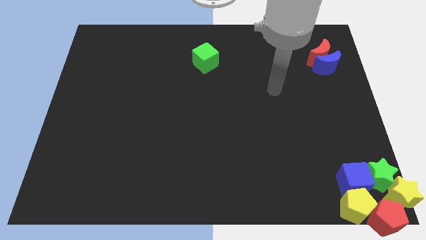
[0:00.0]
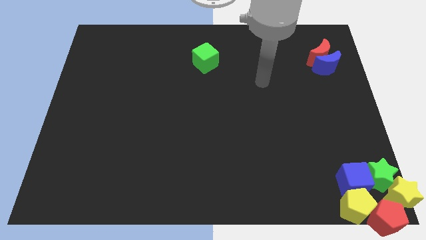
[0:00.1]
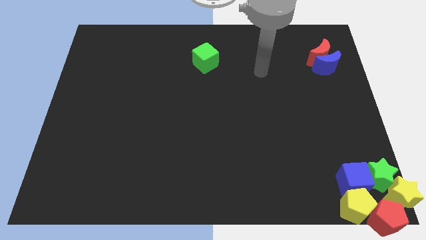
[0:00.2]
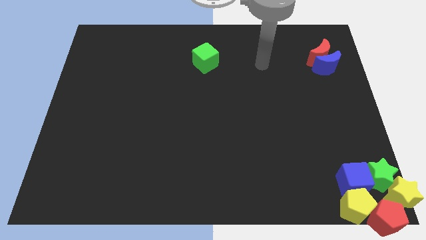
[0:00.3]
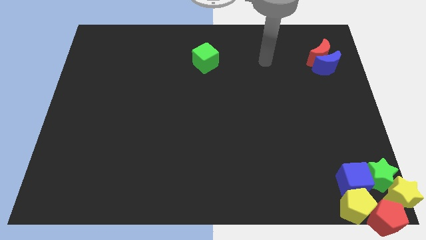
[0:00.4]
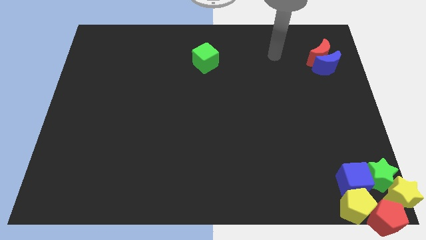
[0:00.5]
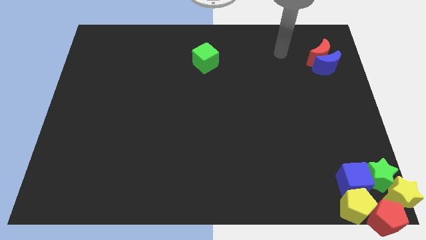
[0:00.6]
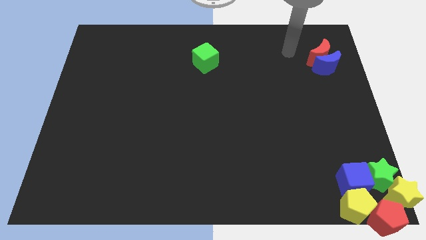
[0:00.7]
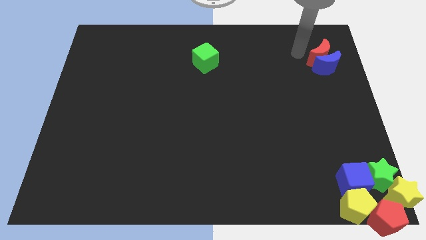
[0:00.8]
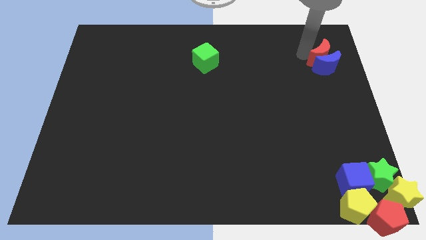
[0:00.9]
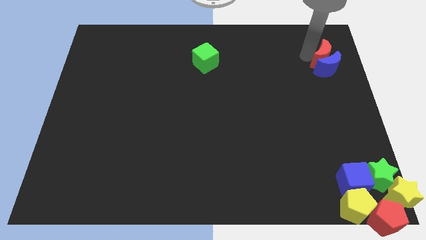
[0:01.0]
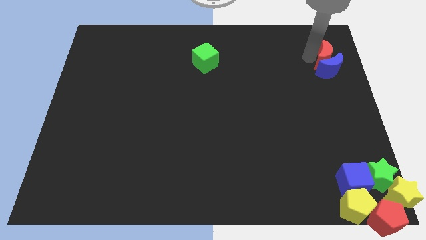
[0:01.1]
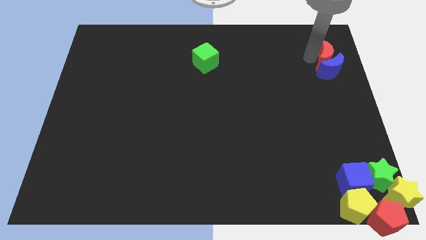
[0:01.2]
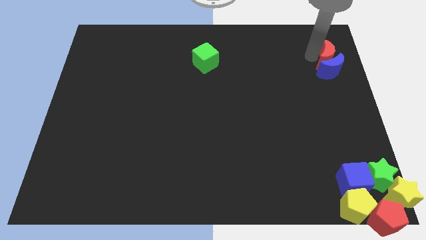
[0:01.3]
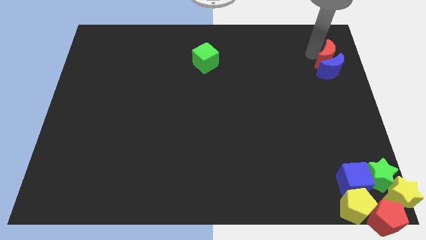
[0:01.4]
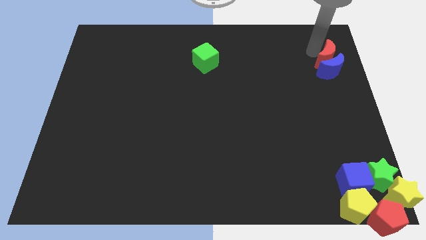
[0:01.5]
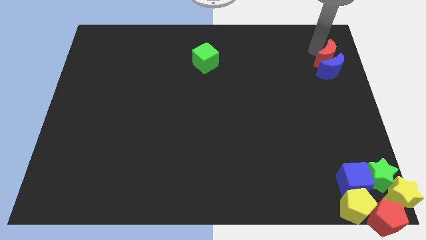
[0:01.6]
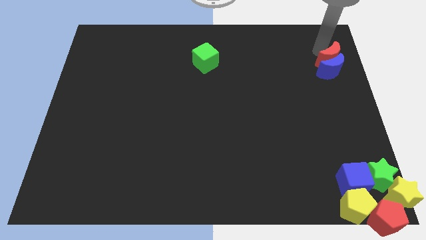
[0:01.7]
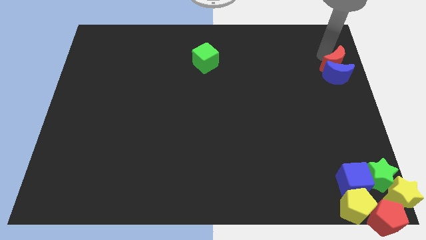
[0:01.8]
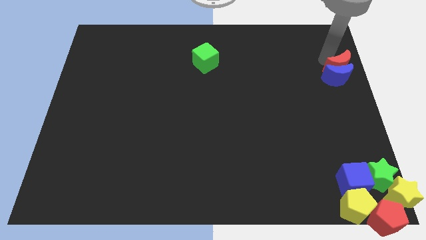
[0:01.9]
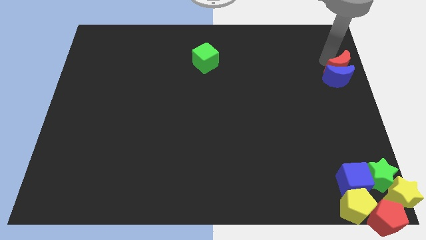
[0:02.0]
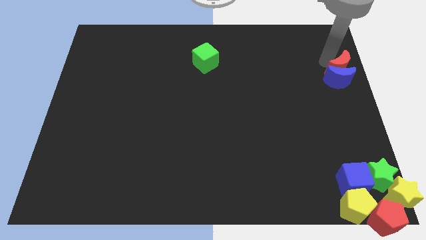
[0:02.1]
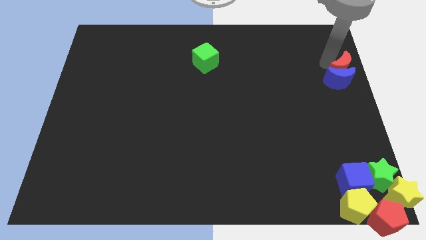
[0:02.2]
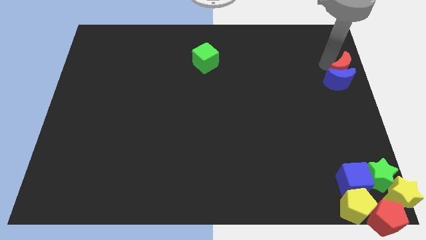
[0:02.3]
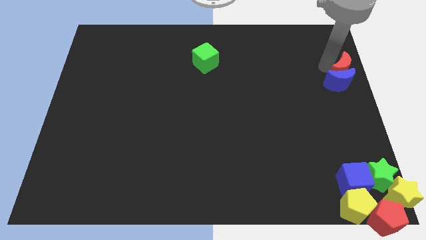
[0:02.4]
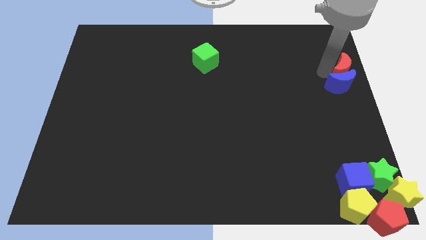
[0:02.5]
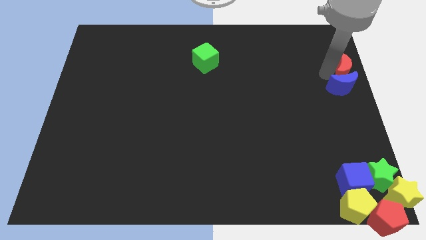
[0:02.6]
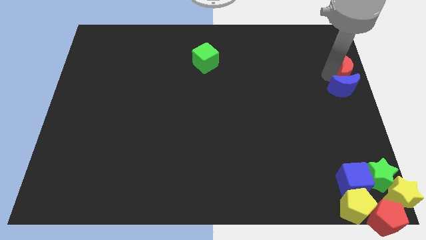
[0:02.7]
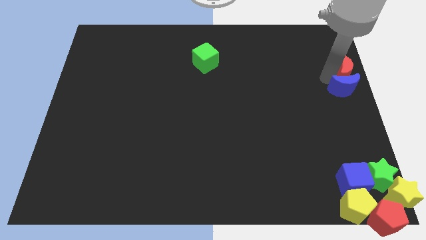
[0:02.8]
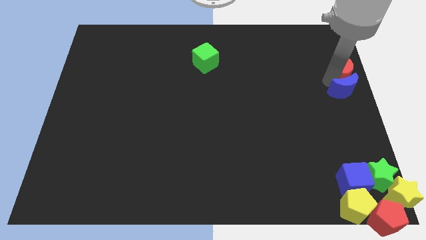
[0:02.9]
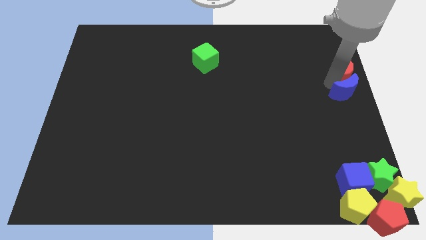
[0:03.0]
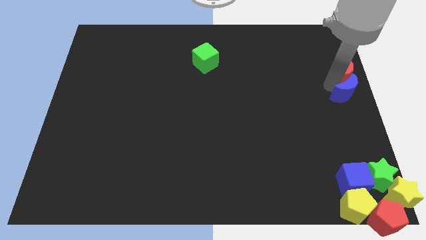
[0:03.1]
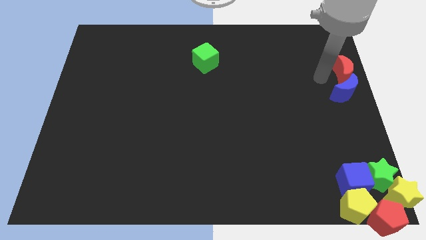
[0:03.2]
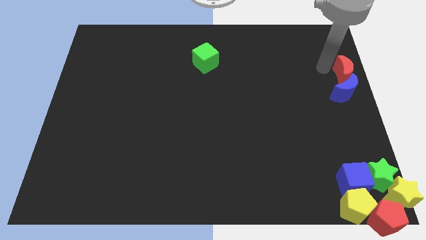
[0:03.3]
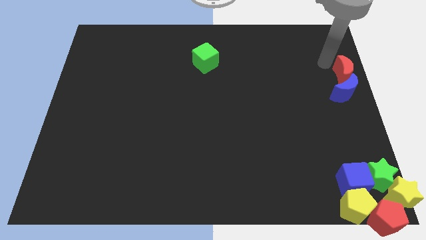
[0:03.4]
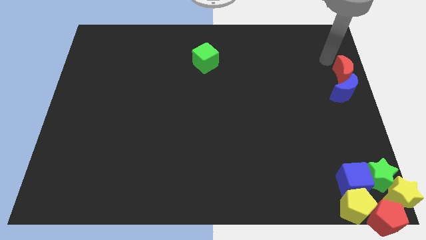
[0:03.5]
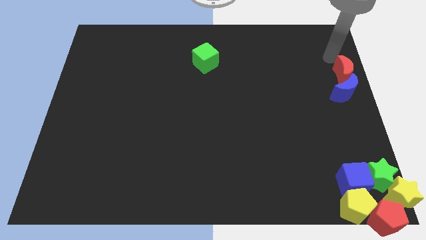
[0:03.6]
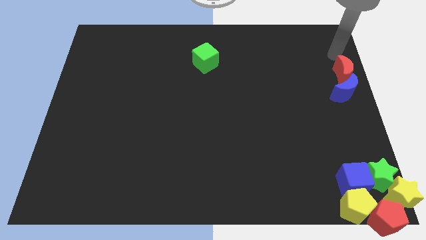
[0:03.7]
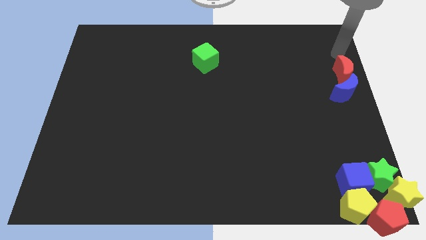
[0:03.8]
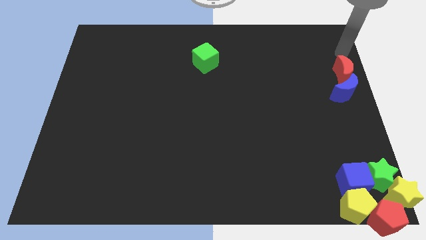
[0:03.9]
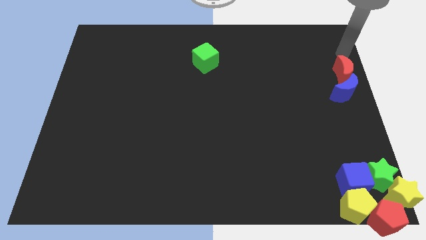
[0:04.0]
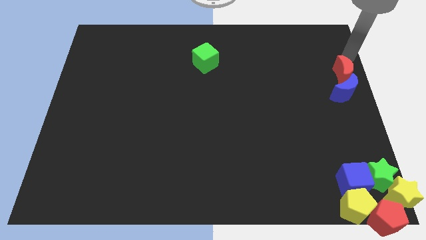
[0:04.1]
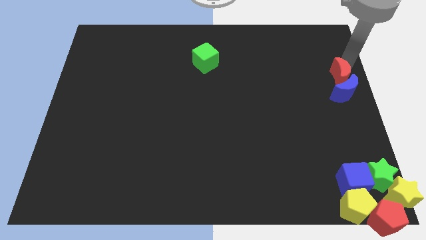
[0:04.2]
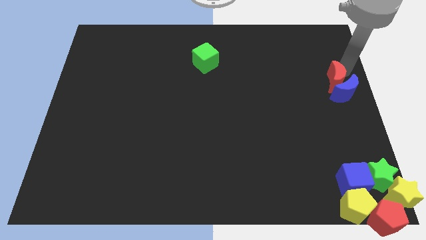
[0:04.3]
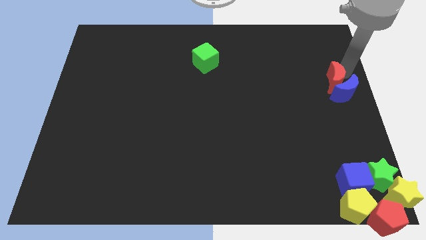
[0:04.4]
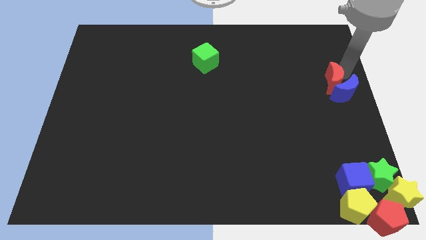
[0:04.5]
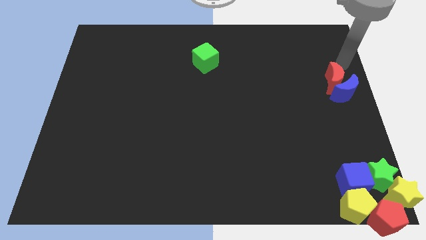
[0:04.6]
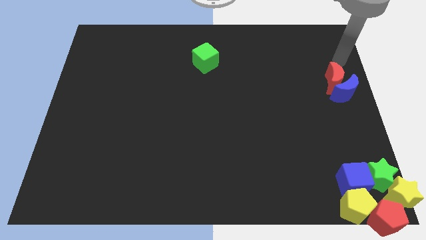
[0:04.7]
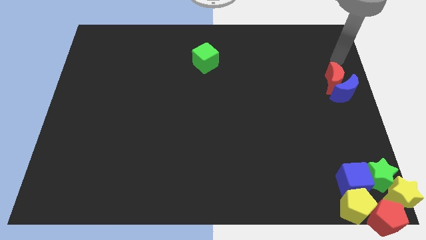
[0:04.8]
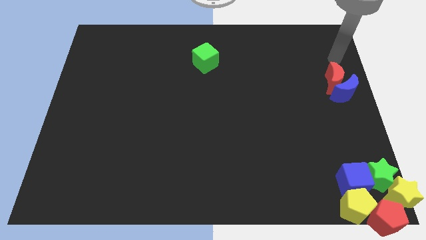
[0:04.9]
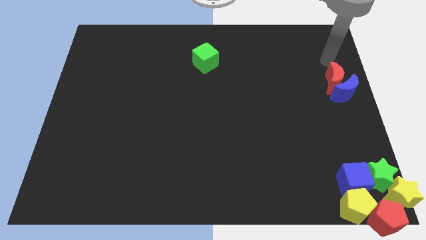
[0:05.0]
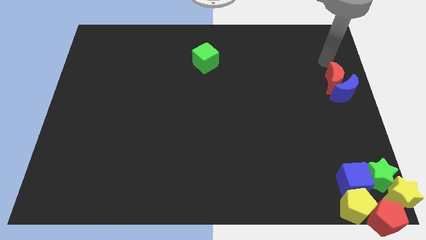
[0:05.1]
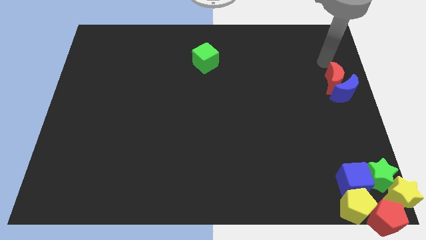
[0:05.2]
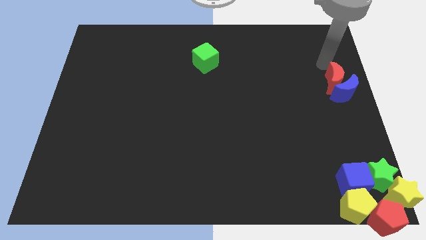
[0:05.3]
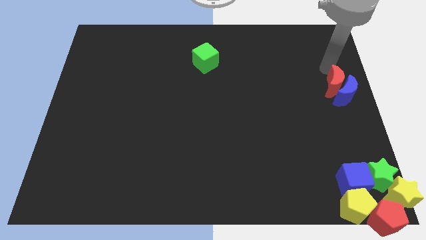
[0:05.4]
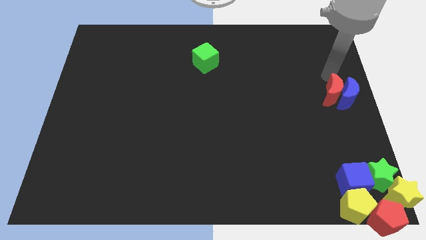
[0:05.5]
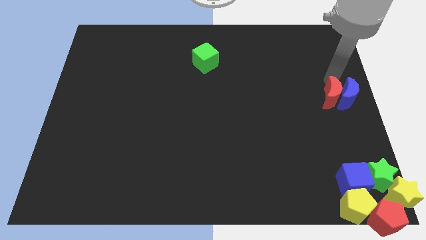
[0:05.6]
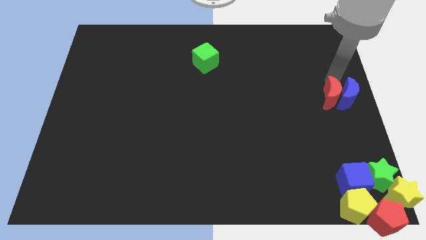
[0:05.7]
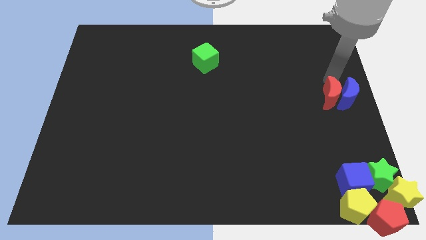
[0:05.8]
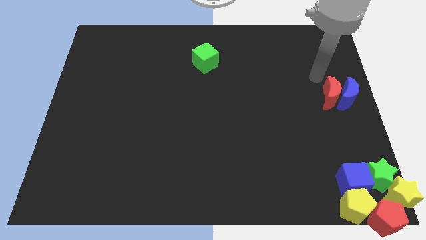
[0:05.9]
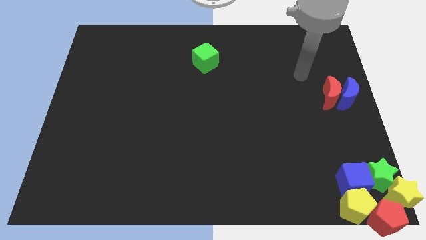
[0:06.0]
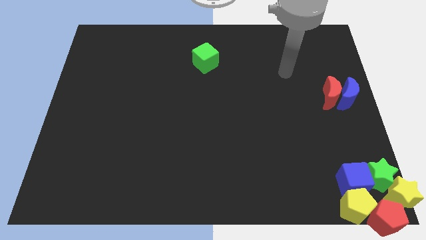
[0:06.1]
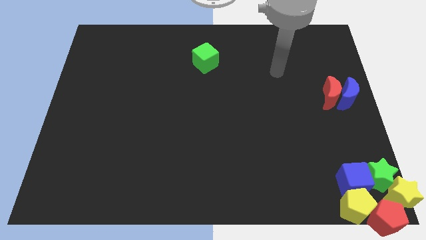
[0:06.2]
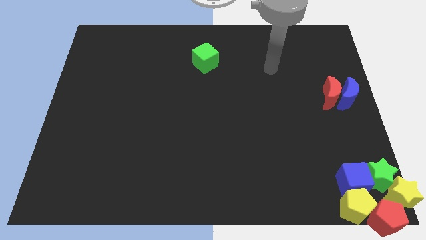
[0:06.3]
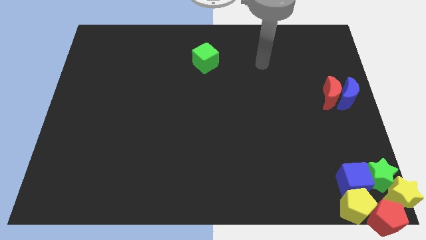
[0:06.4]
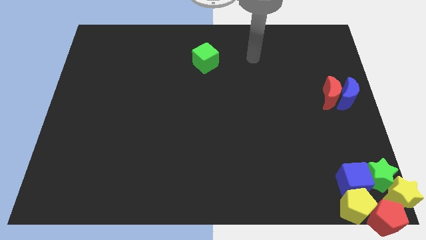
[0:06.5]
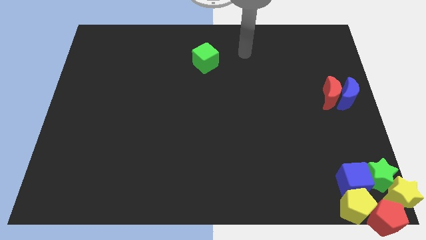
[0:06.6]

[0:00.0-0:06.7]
push the red moon into the blue moon

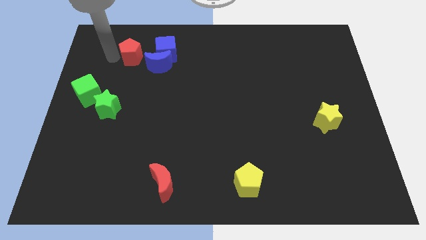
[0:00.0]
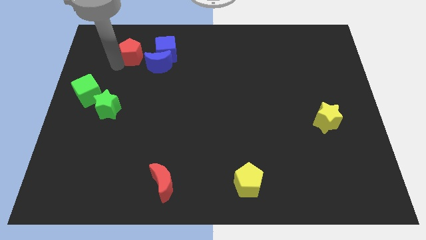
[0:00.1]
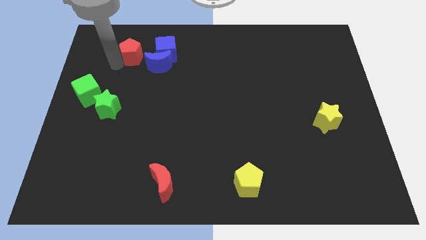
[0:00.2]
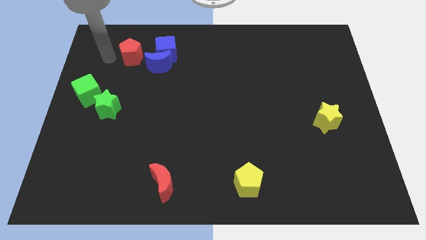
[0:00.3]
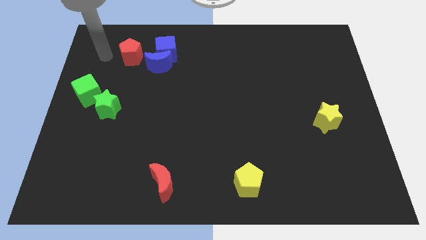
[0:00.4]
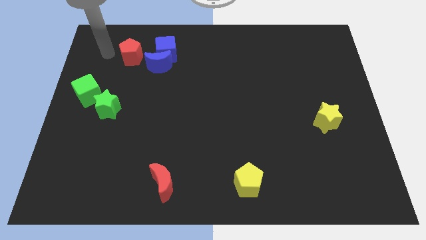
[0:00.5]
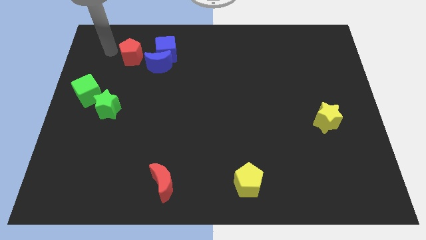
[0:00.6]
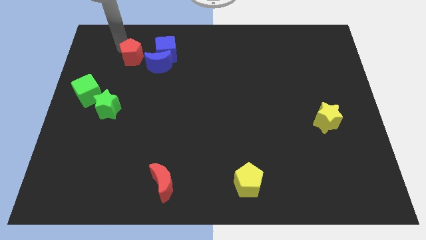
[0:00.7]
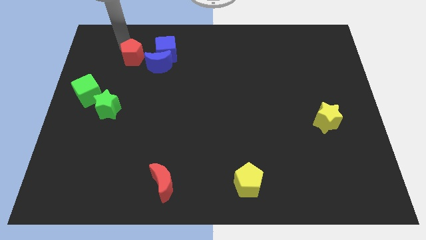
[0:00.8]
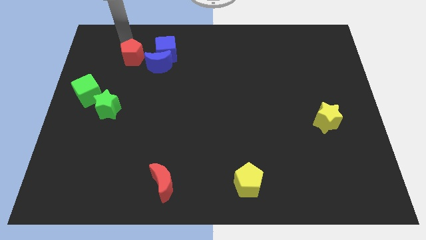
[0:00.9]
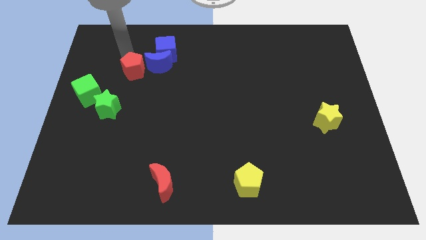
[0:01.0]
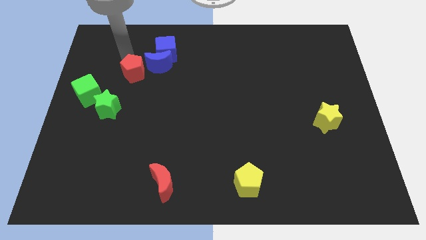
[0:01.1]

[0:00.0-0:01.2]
push the red pentagon left to the blue crescent

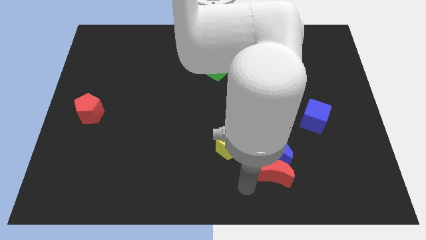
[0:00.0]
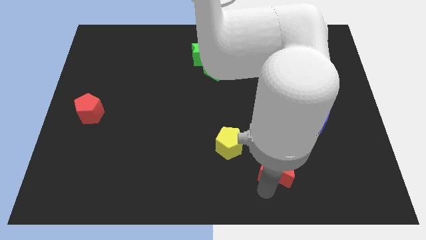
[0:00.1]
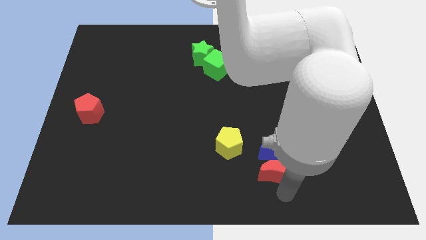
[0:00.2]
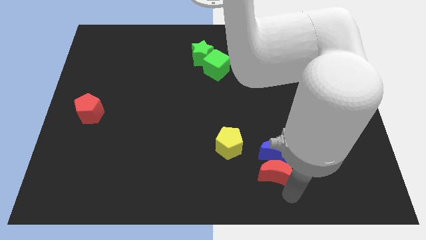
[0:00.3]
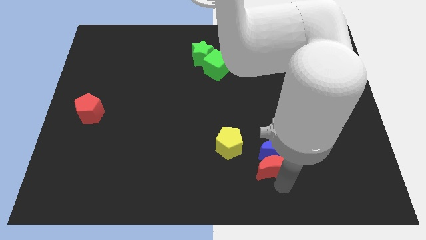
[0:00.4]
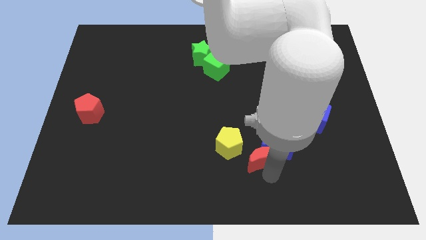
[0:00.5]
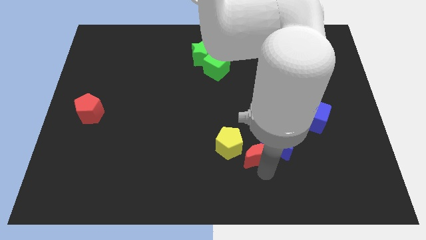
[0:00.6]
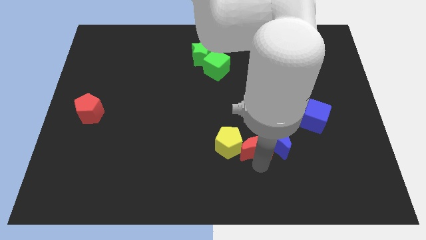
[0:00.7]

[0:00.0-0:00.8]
push the red moon into the yellow pentagon

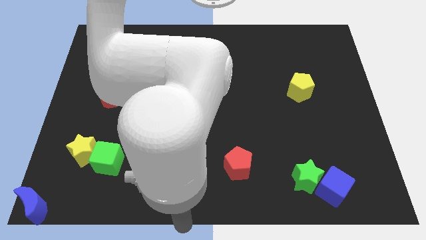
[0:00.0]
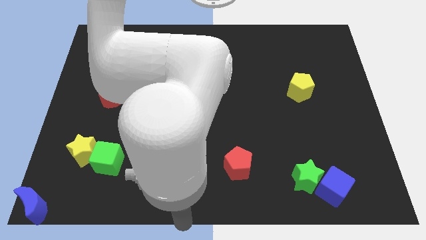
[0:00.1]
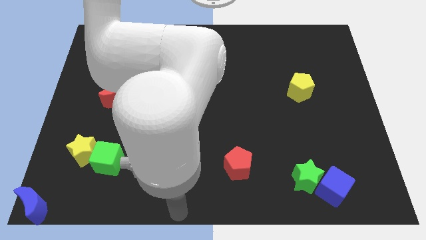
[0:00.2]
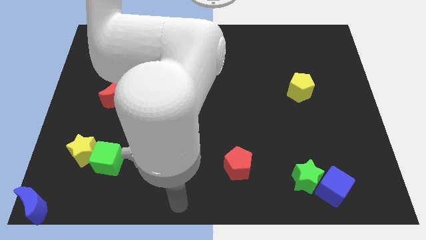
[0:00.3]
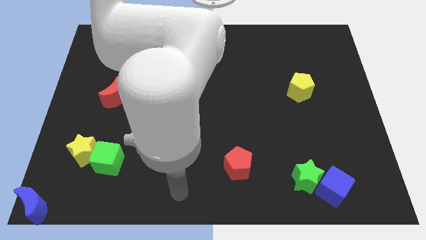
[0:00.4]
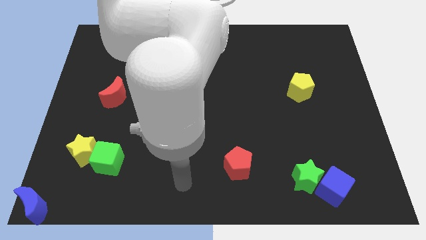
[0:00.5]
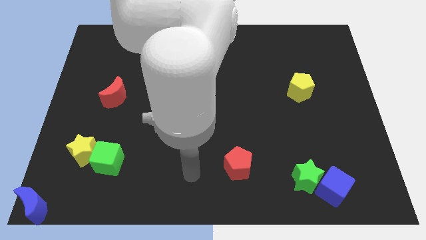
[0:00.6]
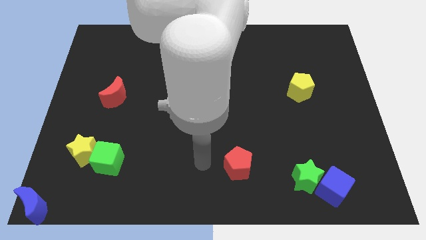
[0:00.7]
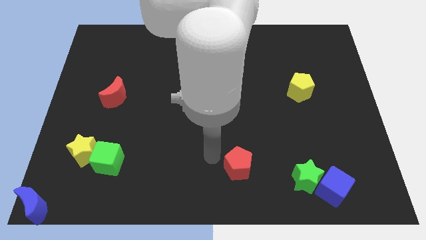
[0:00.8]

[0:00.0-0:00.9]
place your arm to the left side of red pentagon
